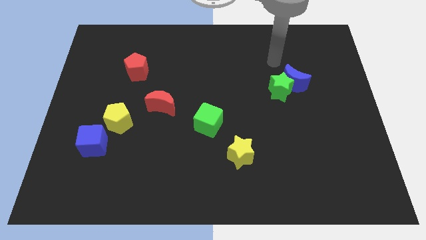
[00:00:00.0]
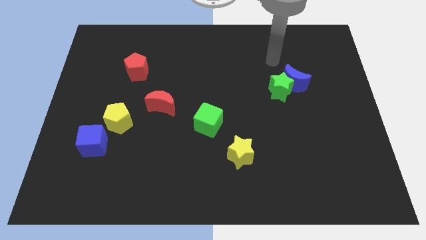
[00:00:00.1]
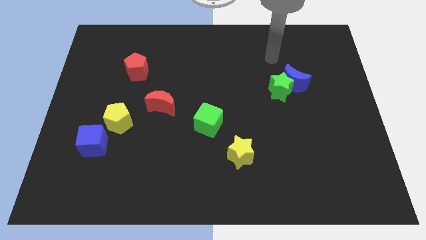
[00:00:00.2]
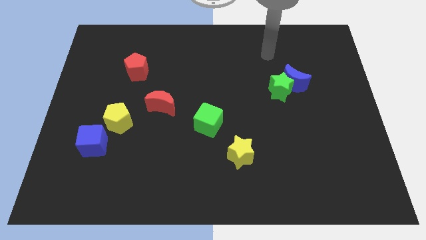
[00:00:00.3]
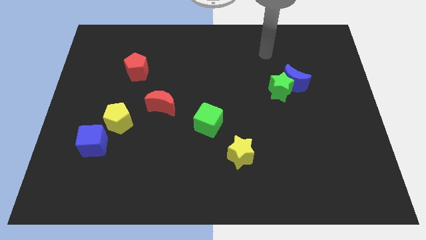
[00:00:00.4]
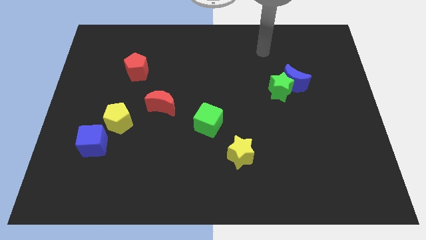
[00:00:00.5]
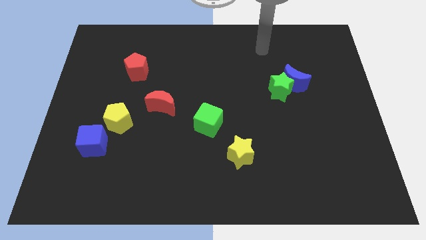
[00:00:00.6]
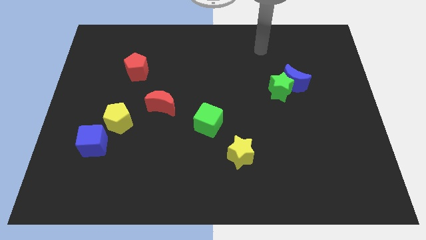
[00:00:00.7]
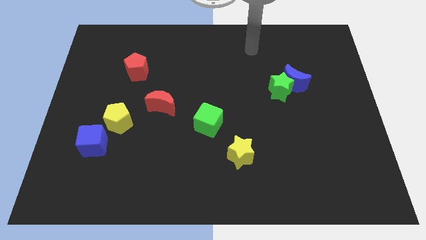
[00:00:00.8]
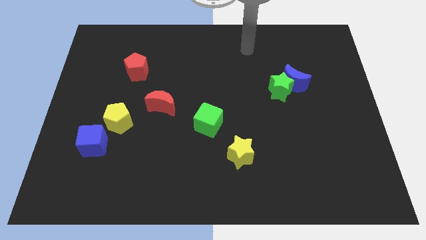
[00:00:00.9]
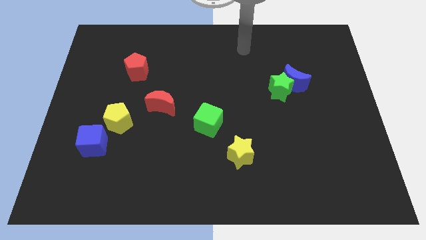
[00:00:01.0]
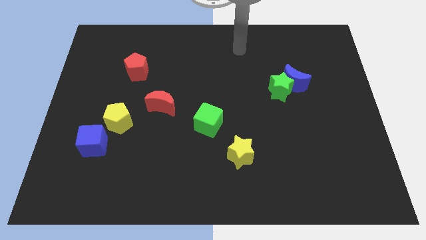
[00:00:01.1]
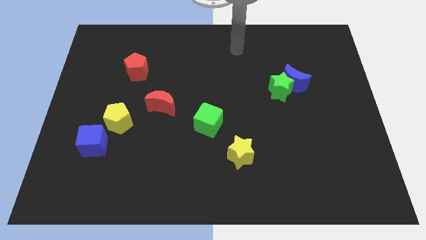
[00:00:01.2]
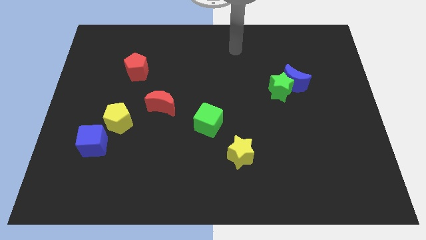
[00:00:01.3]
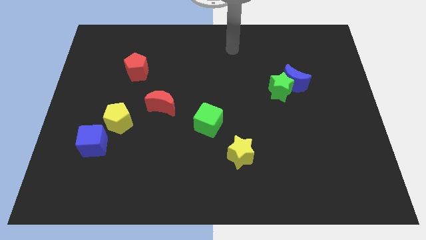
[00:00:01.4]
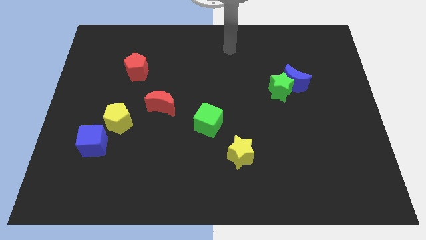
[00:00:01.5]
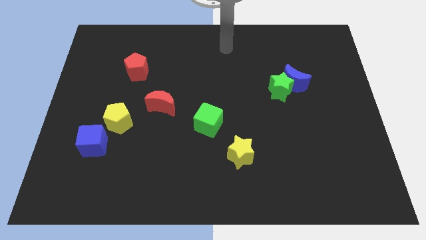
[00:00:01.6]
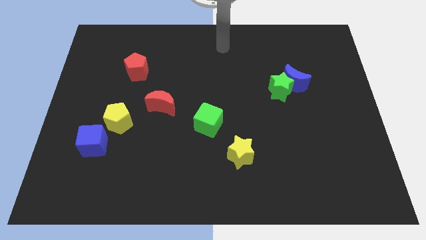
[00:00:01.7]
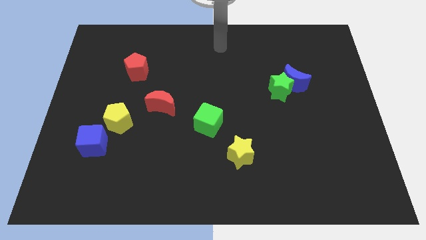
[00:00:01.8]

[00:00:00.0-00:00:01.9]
point your arm at the top center of the board

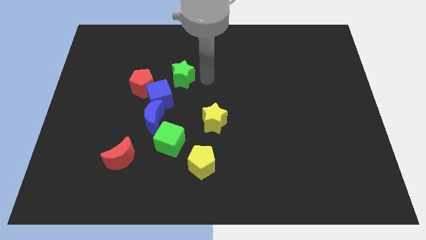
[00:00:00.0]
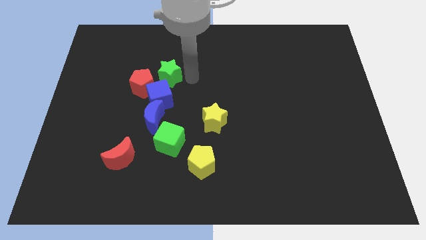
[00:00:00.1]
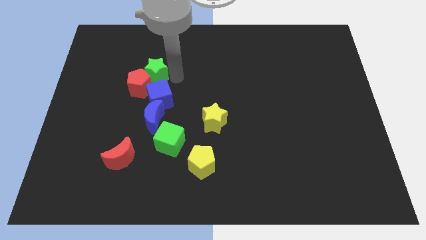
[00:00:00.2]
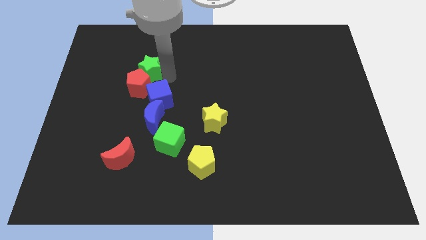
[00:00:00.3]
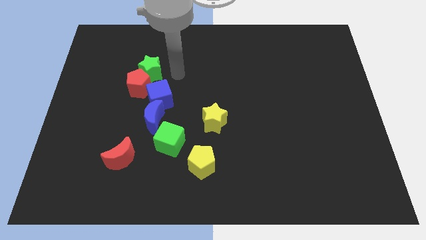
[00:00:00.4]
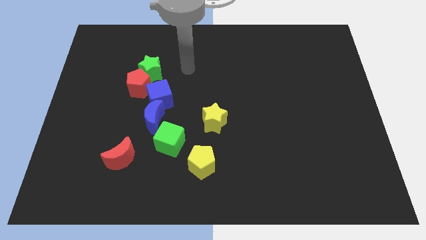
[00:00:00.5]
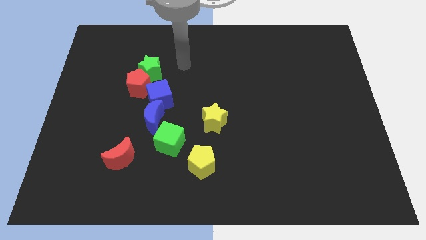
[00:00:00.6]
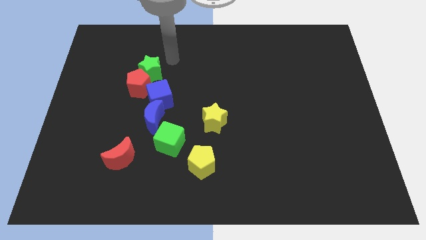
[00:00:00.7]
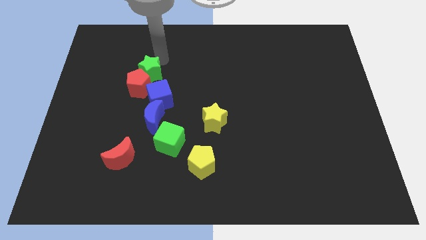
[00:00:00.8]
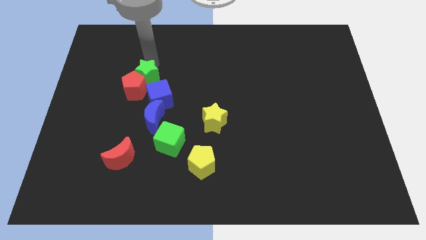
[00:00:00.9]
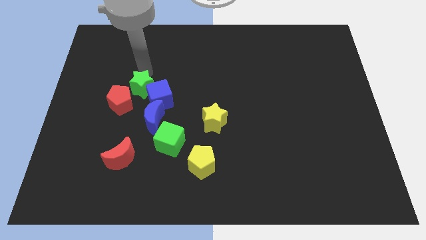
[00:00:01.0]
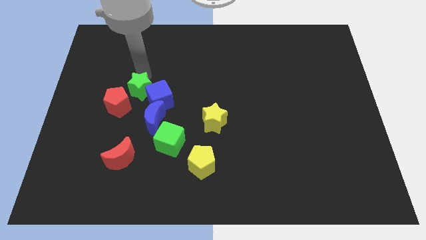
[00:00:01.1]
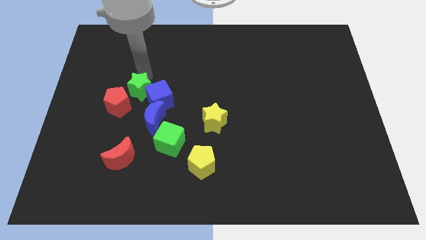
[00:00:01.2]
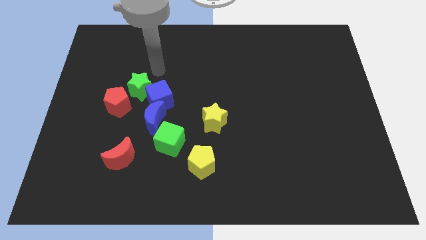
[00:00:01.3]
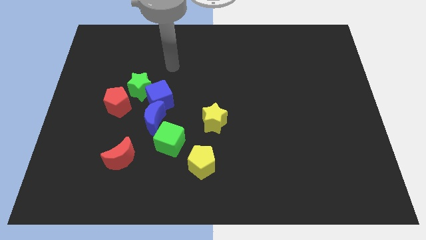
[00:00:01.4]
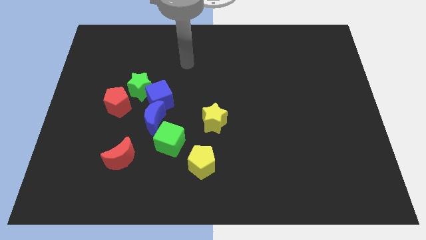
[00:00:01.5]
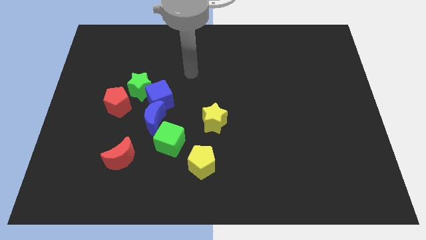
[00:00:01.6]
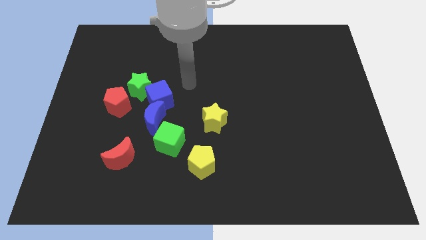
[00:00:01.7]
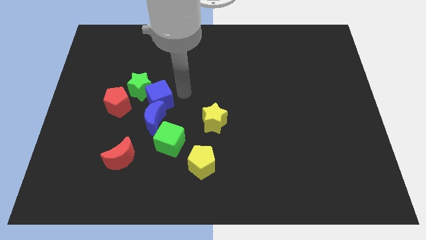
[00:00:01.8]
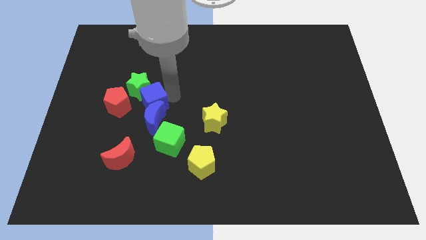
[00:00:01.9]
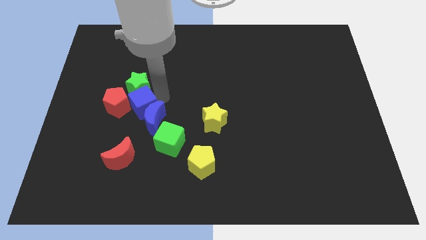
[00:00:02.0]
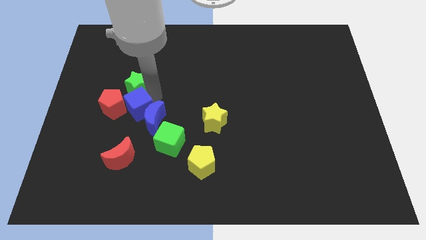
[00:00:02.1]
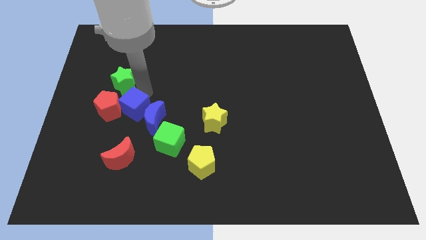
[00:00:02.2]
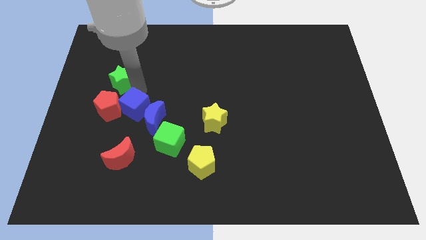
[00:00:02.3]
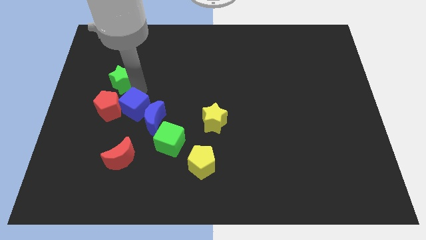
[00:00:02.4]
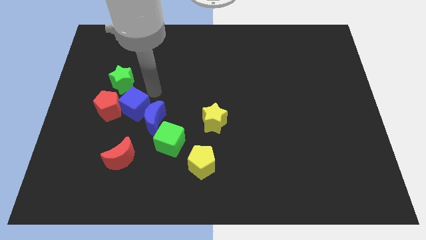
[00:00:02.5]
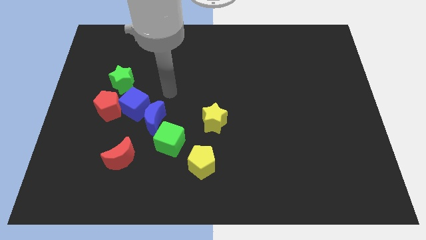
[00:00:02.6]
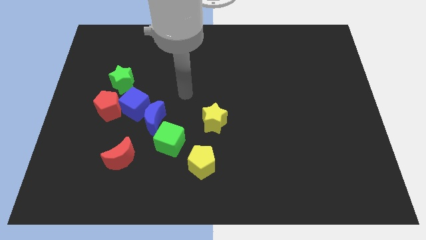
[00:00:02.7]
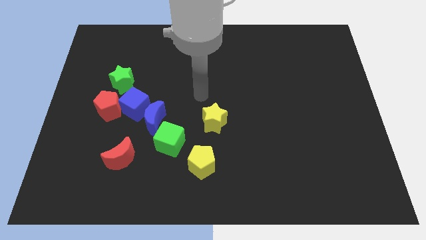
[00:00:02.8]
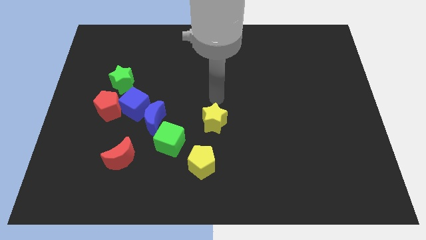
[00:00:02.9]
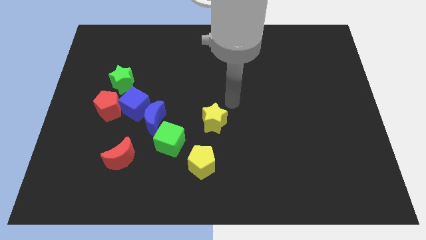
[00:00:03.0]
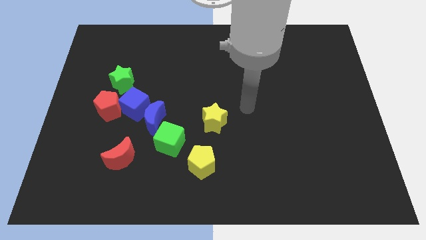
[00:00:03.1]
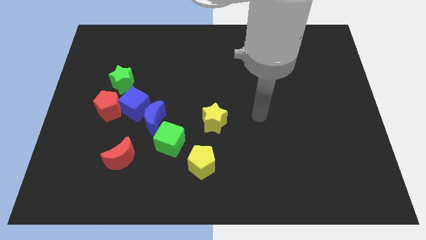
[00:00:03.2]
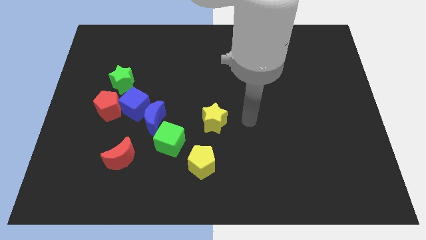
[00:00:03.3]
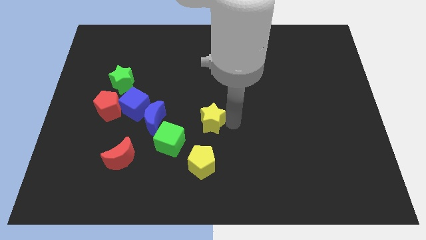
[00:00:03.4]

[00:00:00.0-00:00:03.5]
push the blue cube into the red pentagon

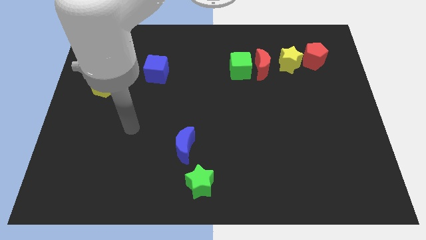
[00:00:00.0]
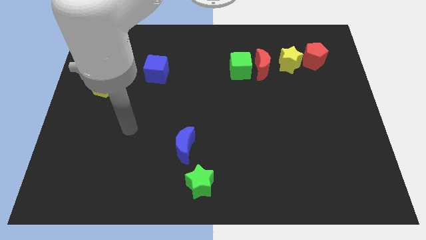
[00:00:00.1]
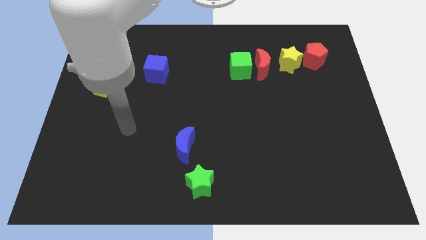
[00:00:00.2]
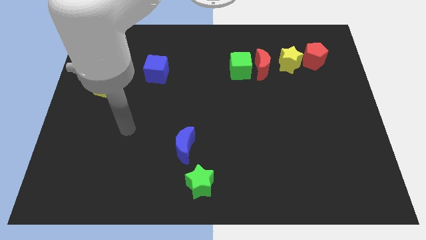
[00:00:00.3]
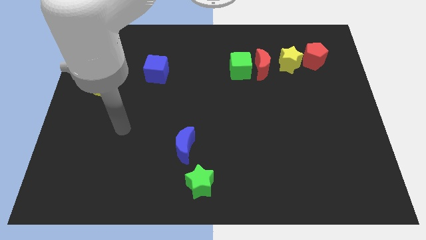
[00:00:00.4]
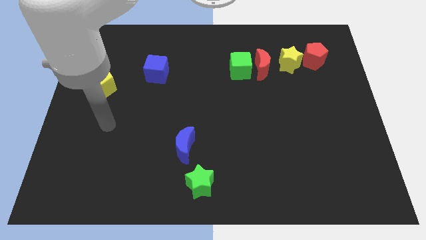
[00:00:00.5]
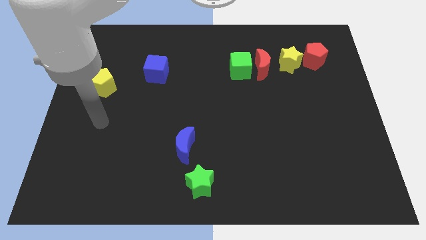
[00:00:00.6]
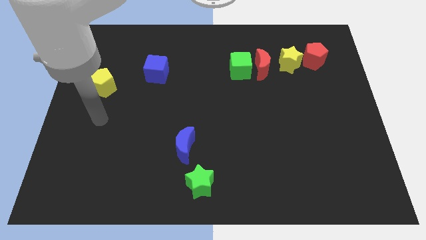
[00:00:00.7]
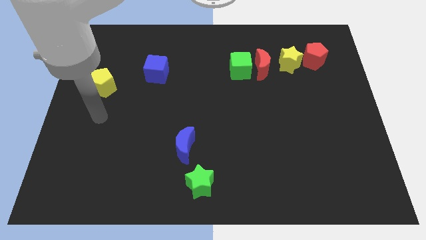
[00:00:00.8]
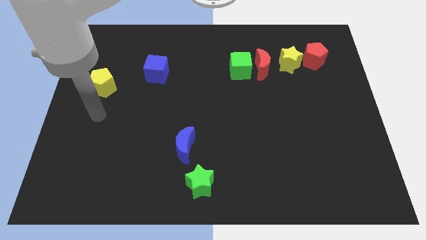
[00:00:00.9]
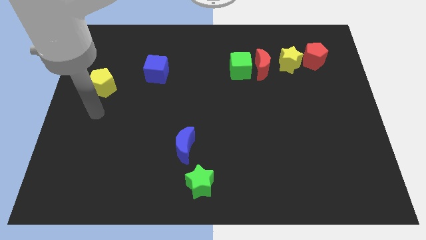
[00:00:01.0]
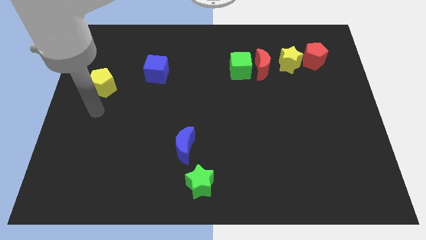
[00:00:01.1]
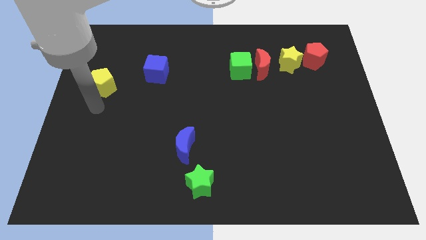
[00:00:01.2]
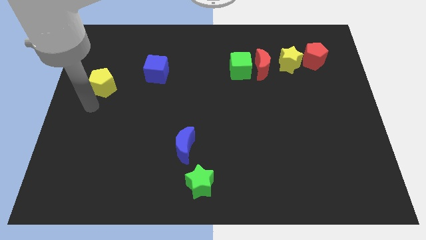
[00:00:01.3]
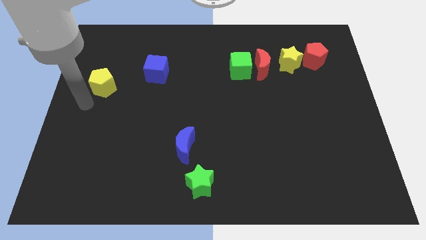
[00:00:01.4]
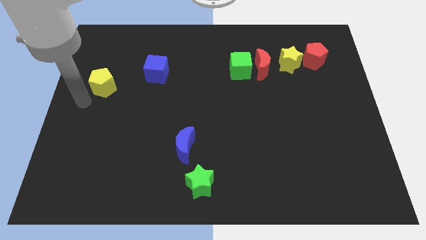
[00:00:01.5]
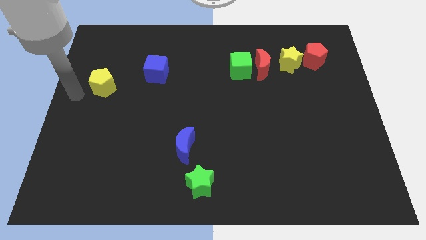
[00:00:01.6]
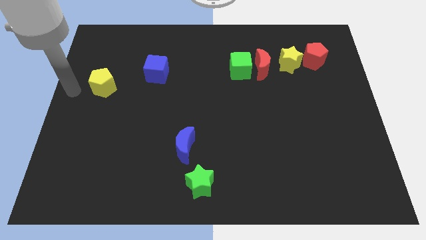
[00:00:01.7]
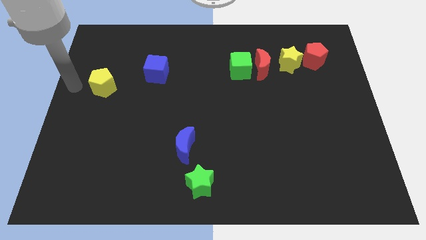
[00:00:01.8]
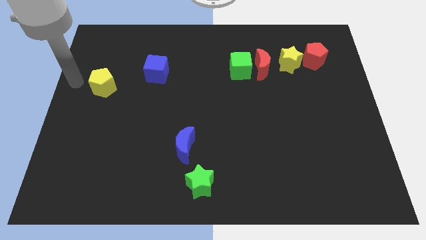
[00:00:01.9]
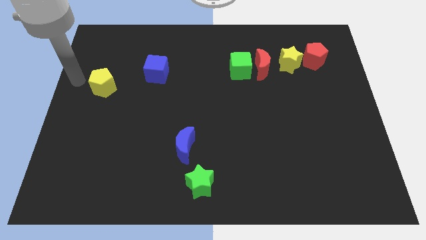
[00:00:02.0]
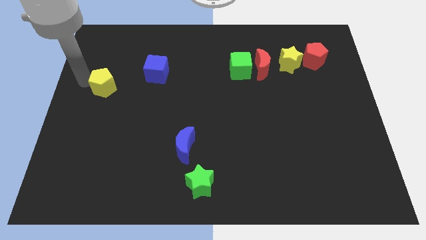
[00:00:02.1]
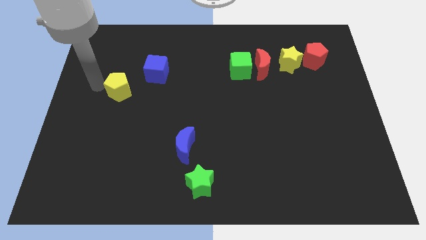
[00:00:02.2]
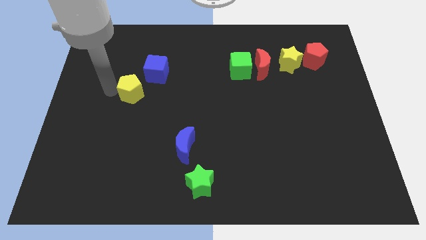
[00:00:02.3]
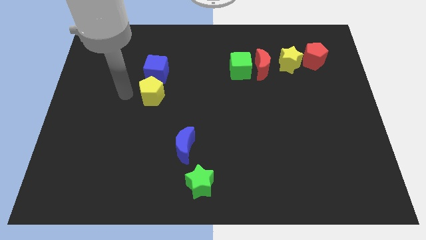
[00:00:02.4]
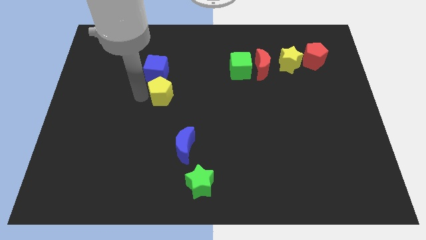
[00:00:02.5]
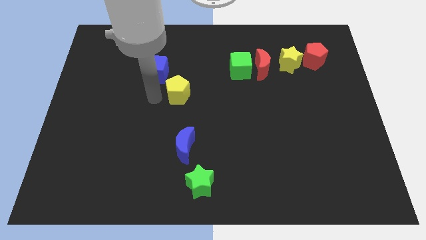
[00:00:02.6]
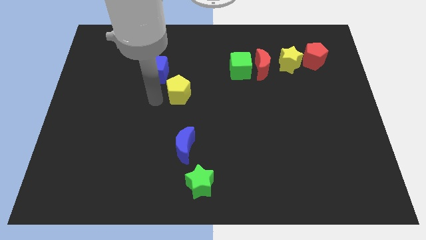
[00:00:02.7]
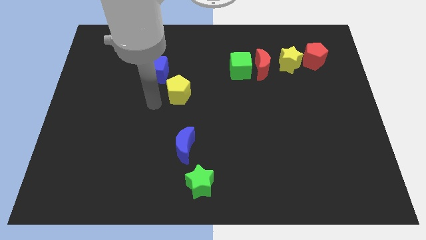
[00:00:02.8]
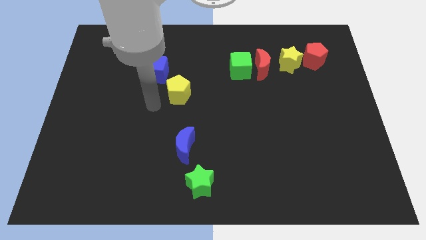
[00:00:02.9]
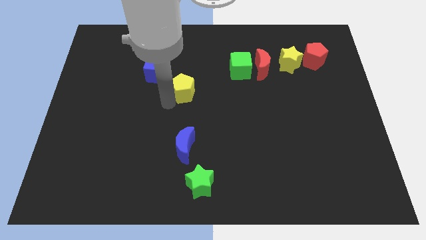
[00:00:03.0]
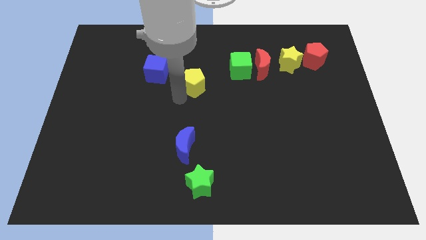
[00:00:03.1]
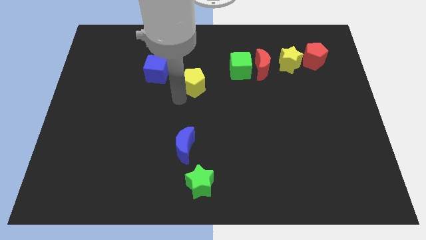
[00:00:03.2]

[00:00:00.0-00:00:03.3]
place the yellow pentagon vertically to the blue moon
